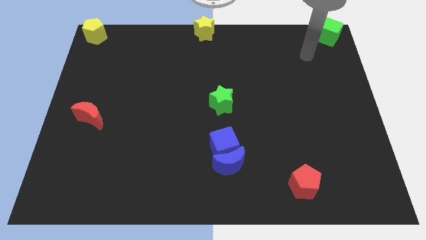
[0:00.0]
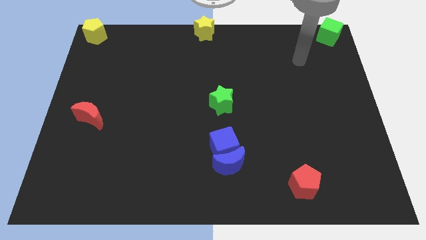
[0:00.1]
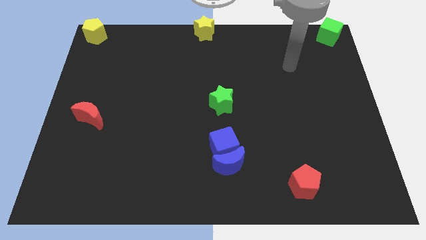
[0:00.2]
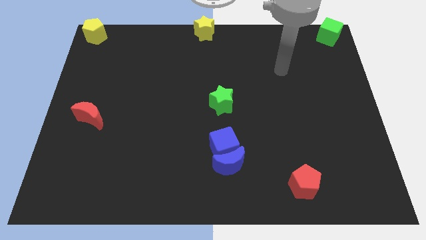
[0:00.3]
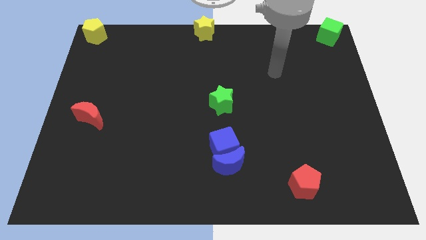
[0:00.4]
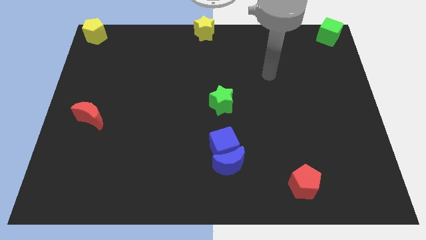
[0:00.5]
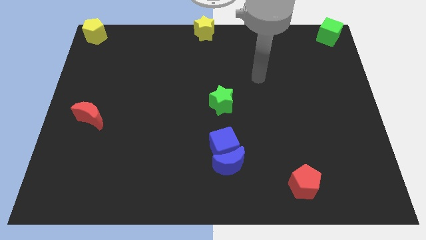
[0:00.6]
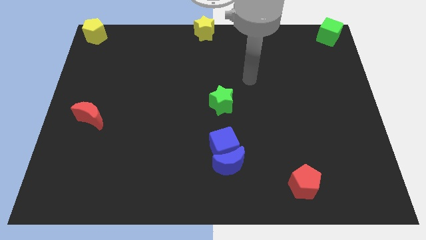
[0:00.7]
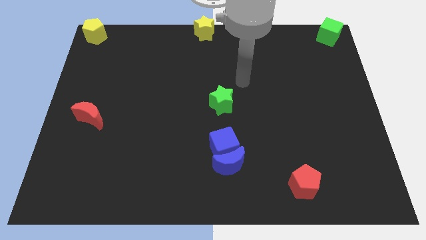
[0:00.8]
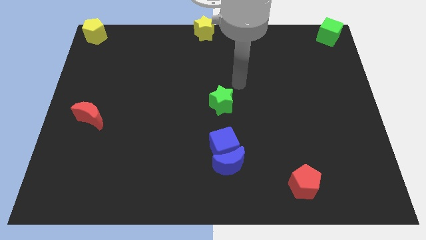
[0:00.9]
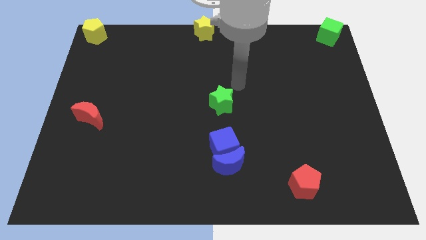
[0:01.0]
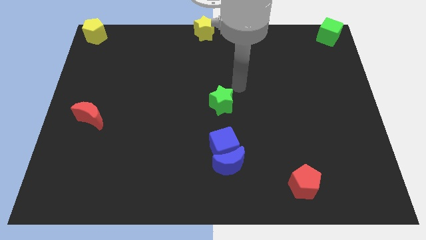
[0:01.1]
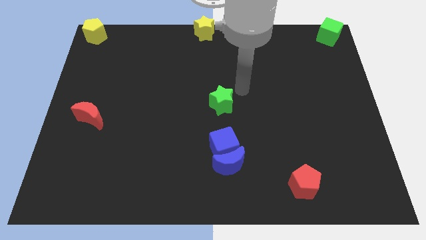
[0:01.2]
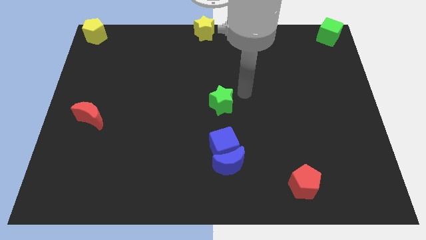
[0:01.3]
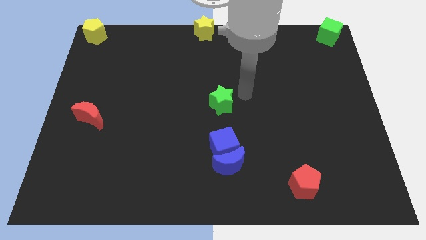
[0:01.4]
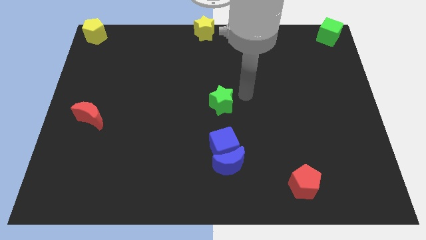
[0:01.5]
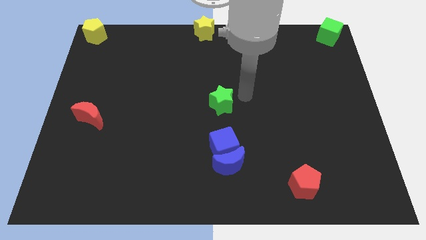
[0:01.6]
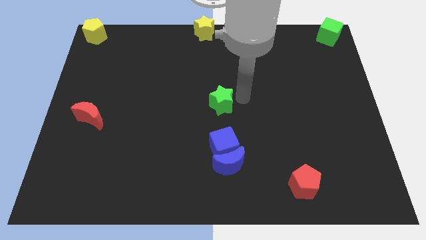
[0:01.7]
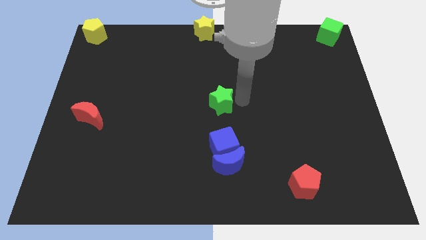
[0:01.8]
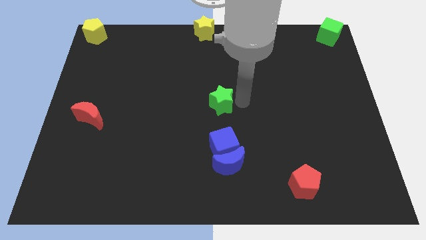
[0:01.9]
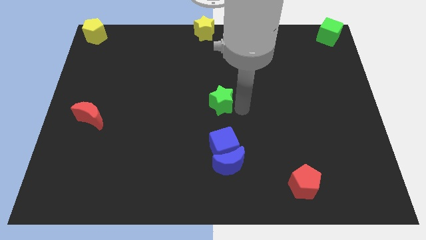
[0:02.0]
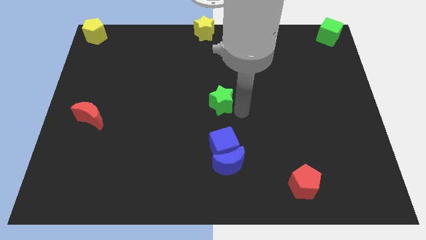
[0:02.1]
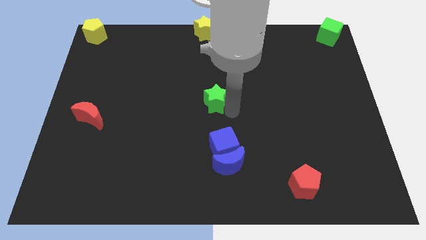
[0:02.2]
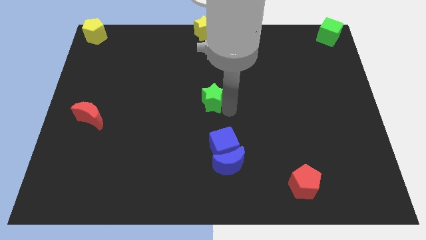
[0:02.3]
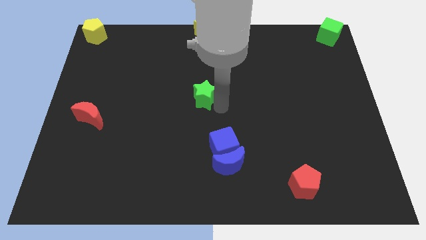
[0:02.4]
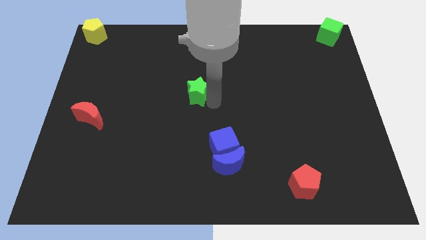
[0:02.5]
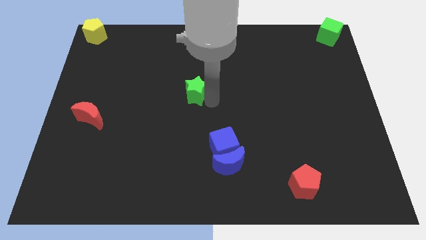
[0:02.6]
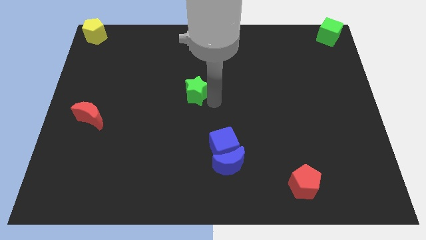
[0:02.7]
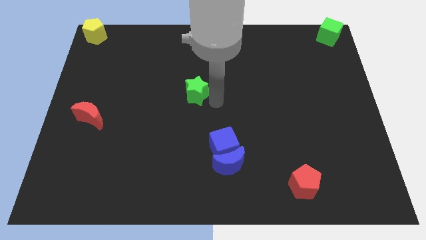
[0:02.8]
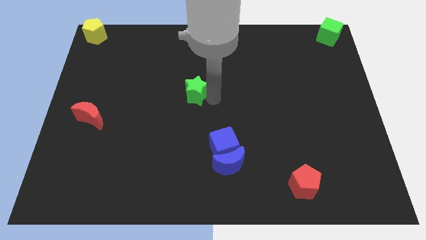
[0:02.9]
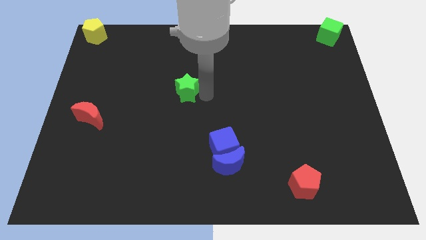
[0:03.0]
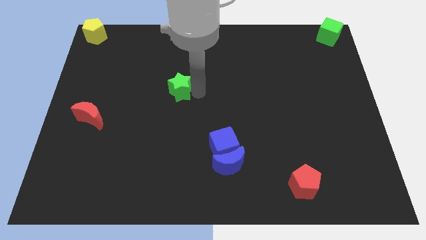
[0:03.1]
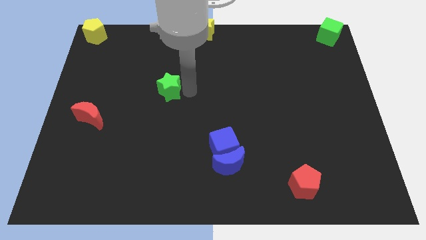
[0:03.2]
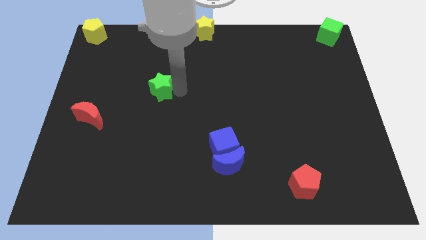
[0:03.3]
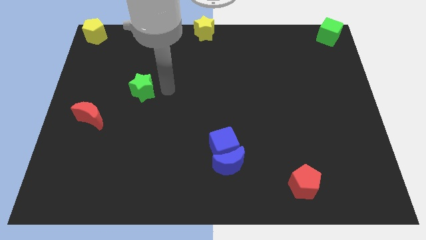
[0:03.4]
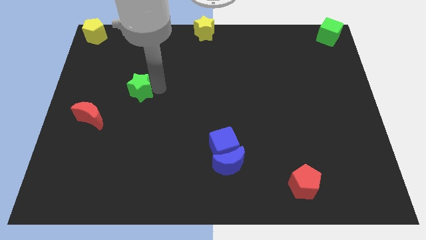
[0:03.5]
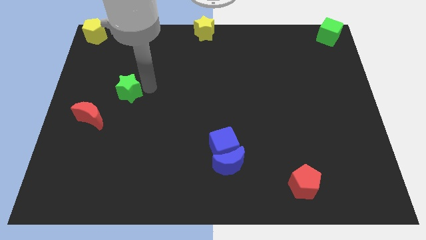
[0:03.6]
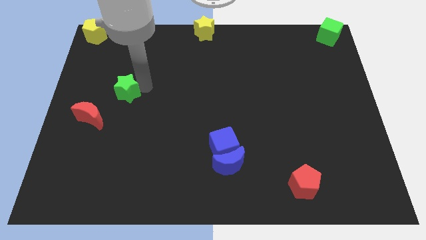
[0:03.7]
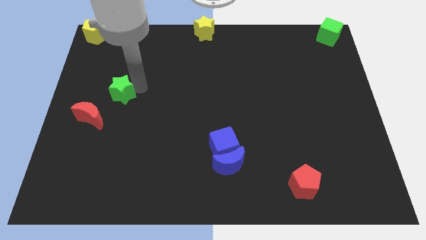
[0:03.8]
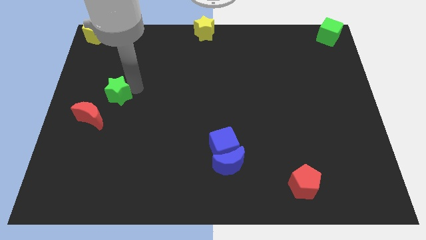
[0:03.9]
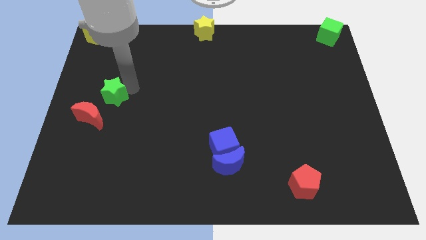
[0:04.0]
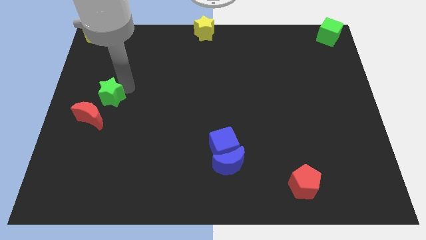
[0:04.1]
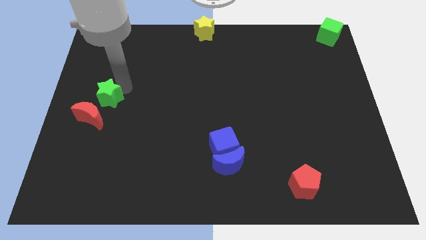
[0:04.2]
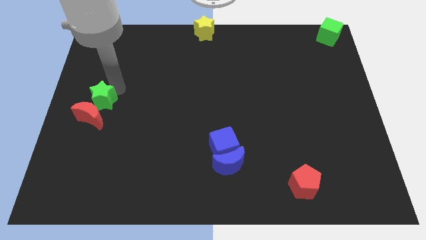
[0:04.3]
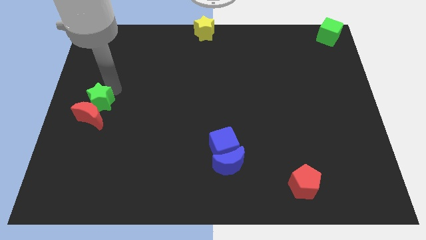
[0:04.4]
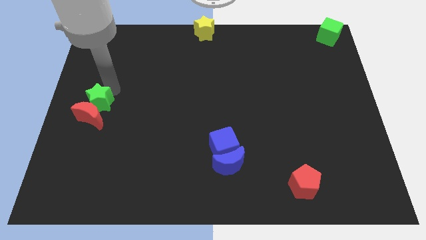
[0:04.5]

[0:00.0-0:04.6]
place the green star above the red moon

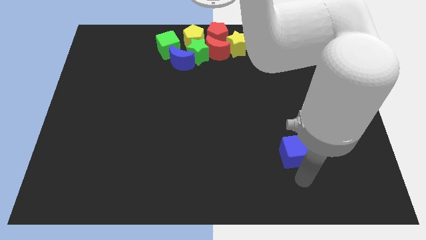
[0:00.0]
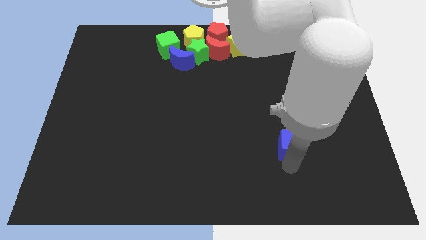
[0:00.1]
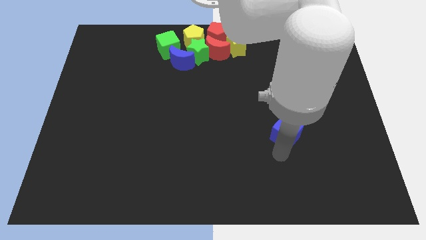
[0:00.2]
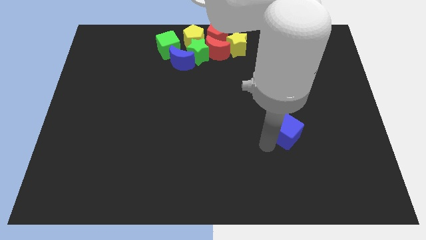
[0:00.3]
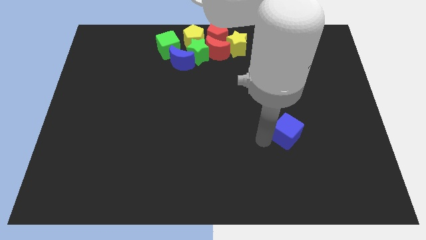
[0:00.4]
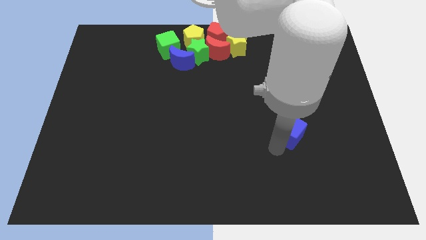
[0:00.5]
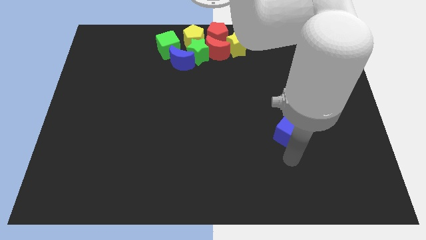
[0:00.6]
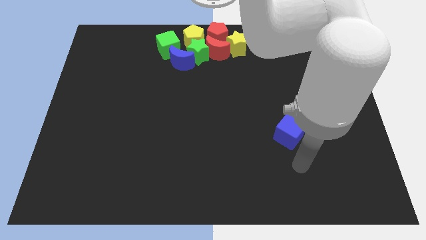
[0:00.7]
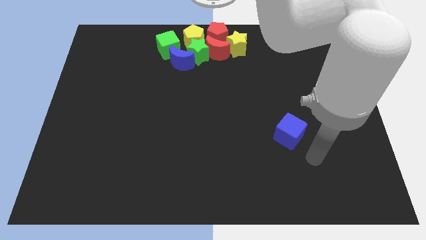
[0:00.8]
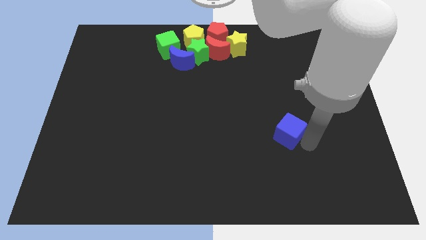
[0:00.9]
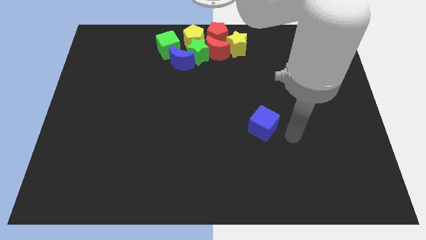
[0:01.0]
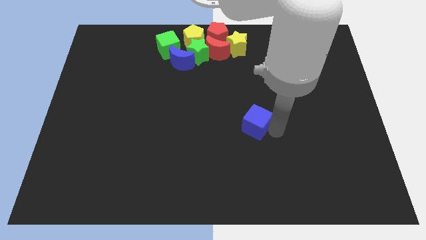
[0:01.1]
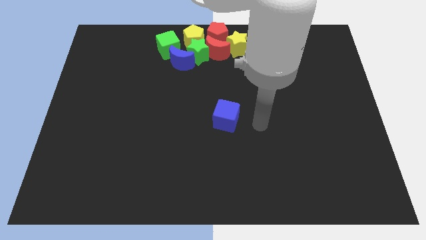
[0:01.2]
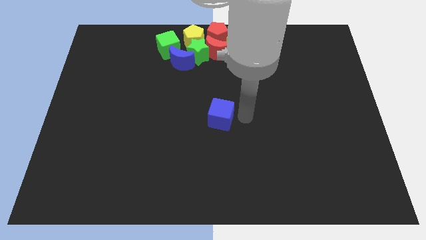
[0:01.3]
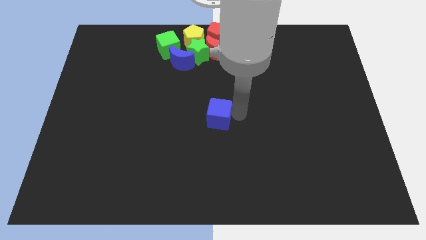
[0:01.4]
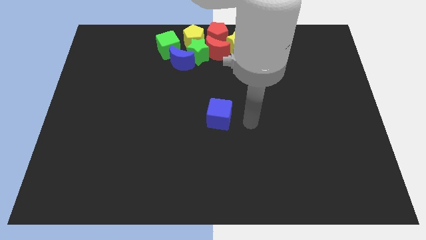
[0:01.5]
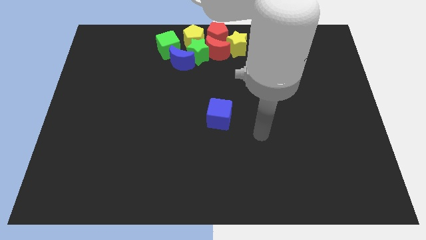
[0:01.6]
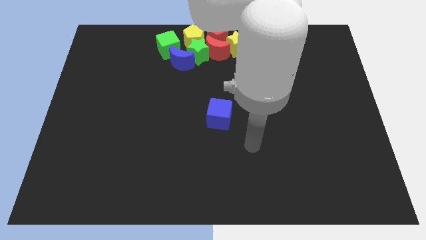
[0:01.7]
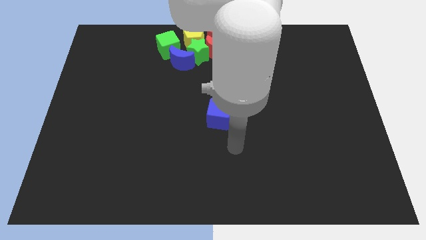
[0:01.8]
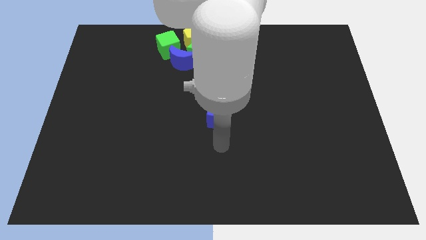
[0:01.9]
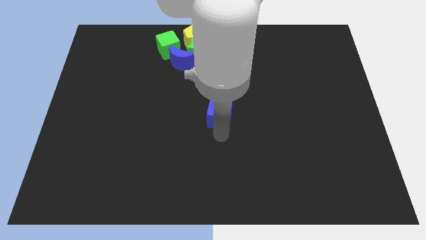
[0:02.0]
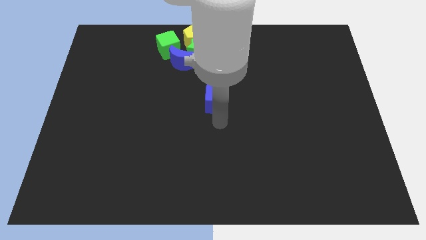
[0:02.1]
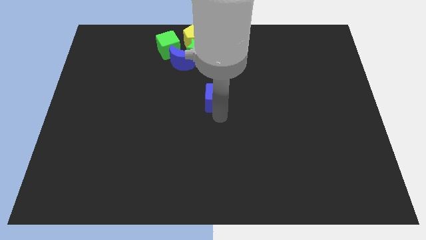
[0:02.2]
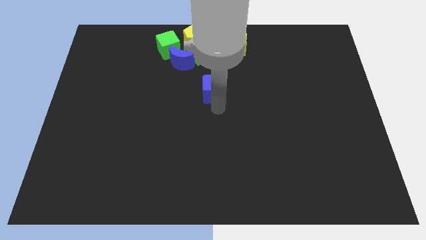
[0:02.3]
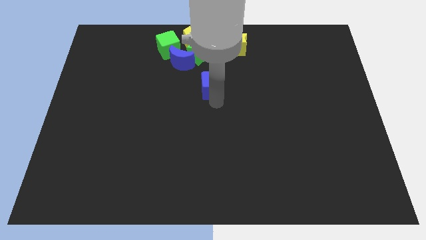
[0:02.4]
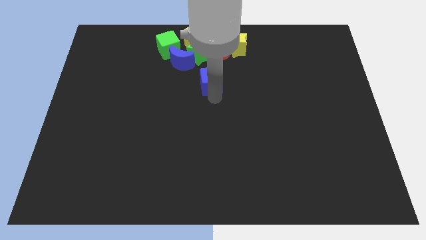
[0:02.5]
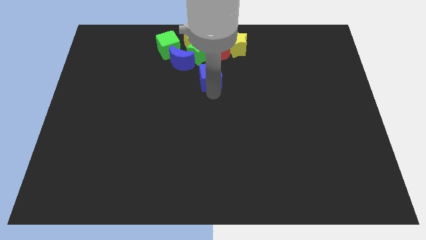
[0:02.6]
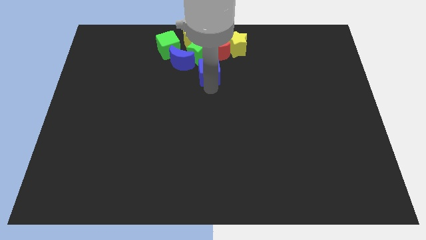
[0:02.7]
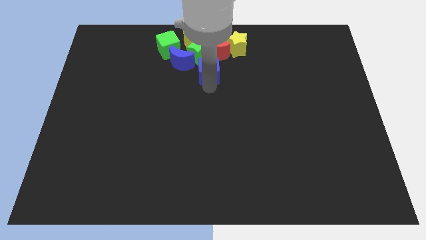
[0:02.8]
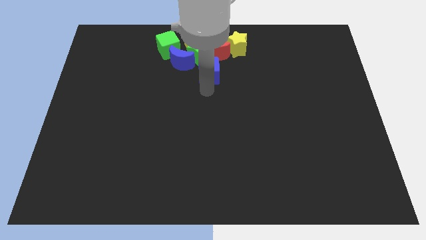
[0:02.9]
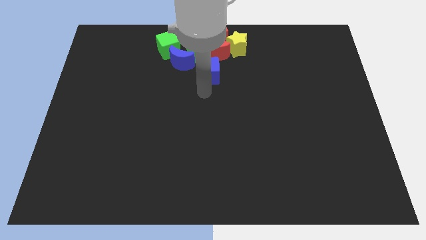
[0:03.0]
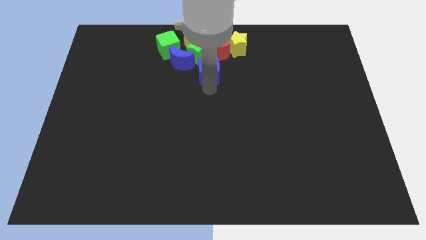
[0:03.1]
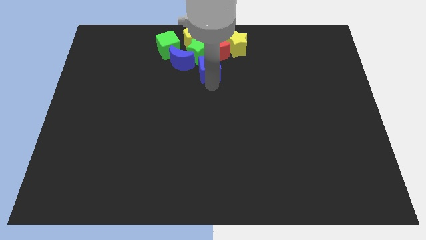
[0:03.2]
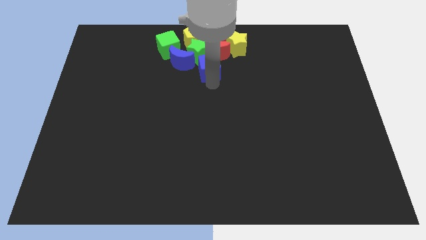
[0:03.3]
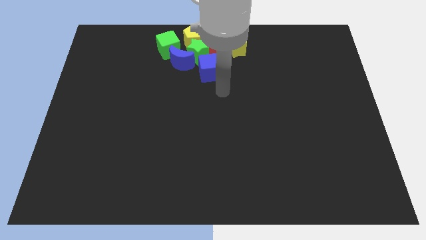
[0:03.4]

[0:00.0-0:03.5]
move blue cube to bottom of red crescent and green star

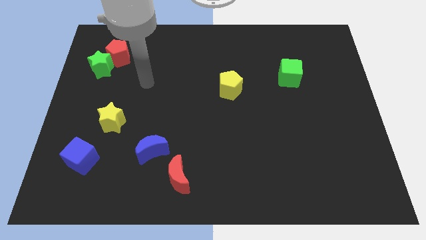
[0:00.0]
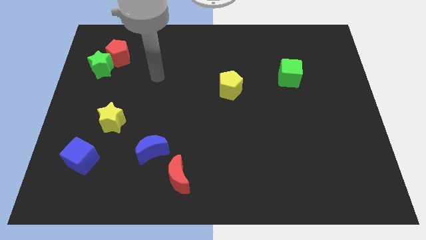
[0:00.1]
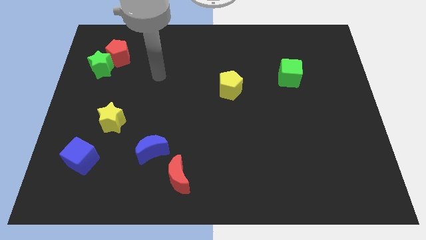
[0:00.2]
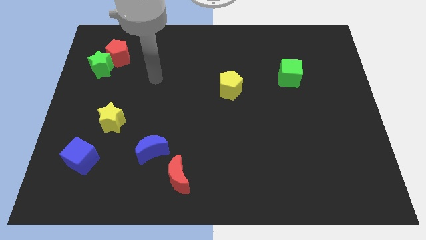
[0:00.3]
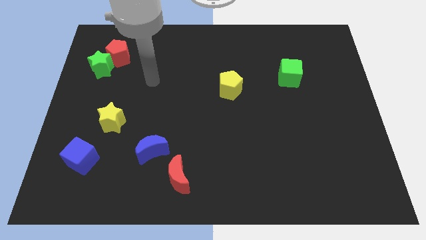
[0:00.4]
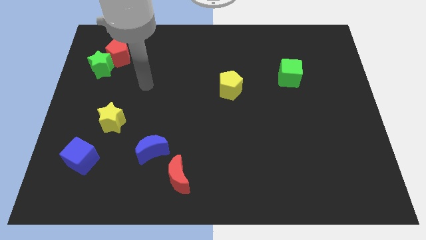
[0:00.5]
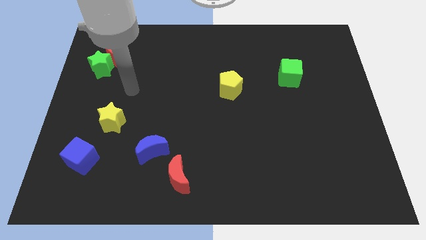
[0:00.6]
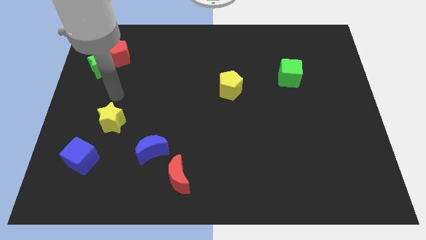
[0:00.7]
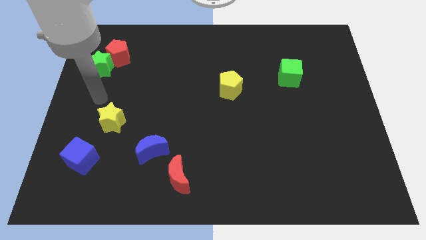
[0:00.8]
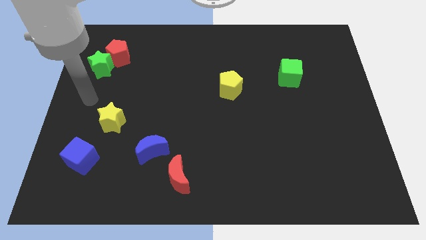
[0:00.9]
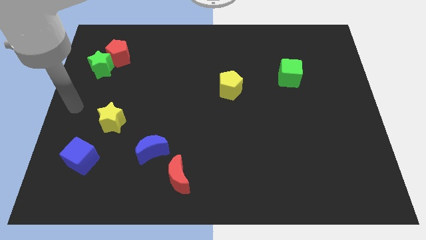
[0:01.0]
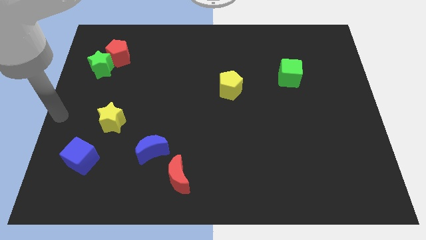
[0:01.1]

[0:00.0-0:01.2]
slide the arm to the left side of the board
